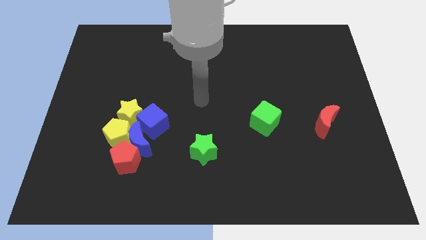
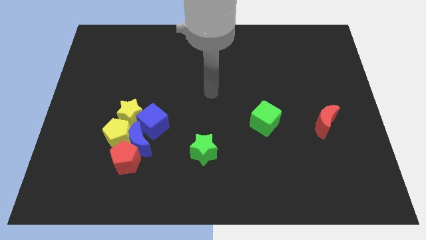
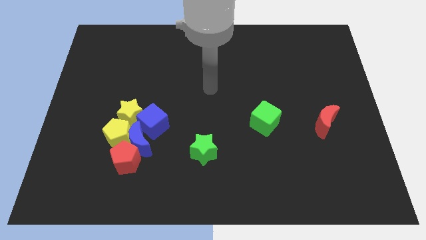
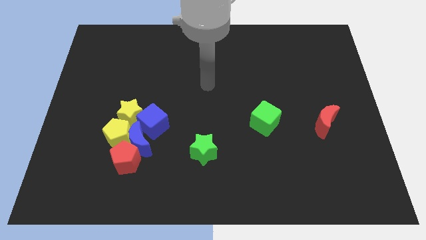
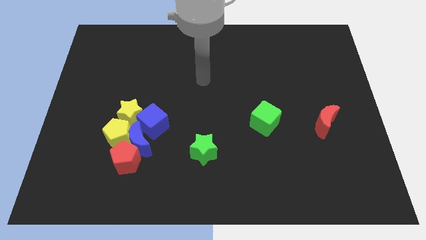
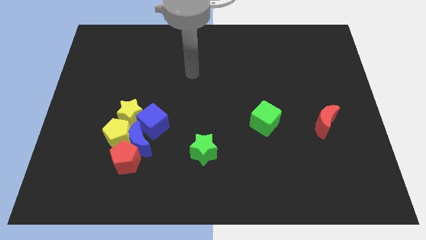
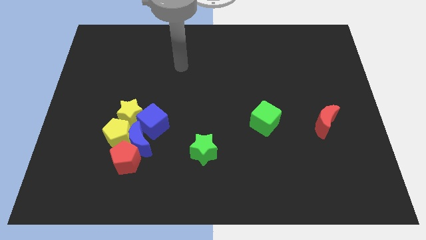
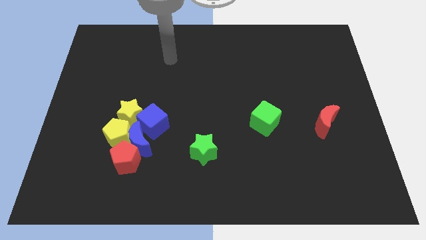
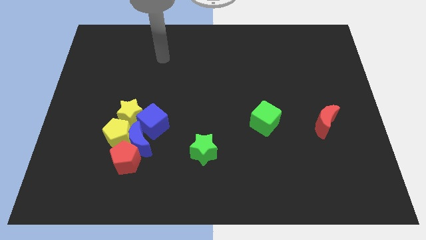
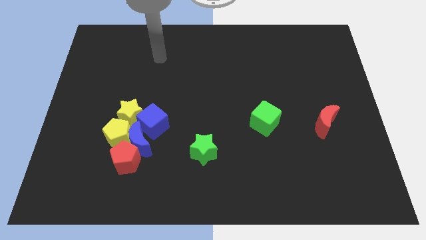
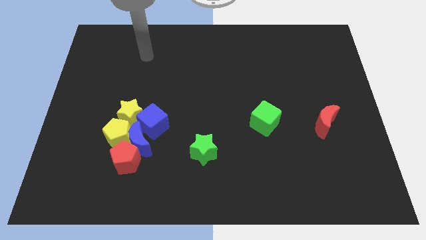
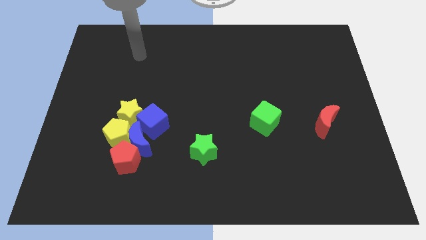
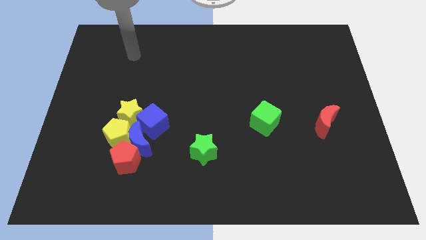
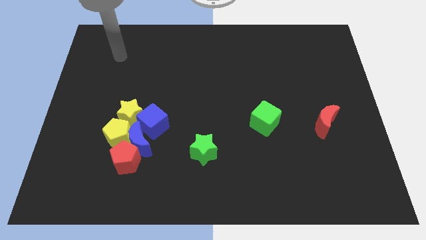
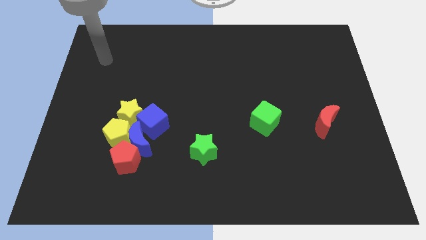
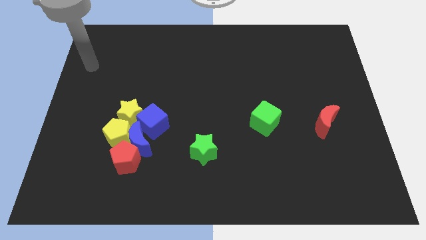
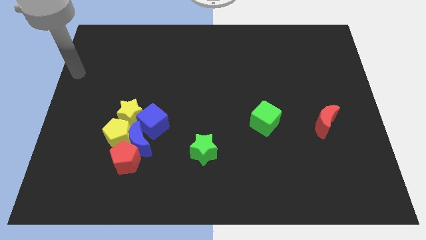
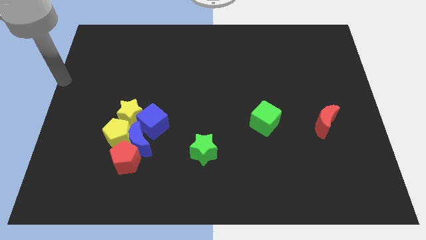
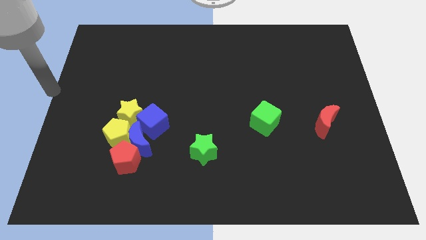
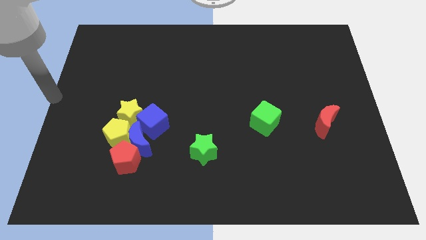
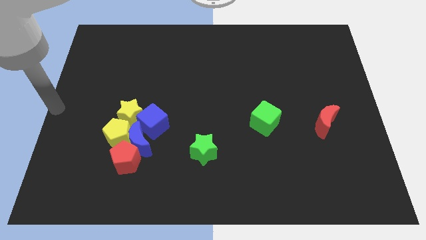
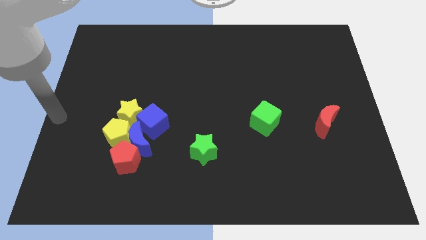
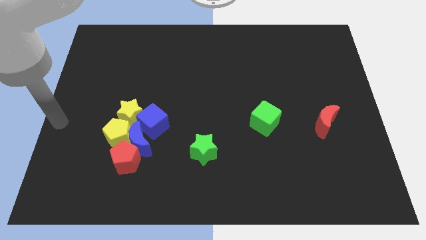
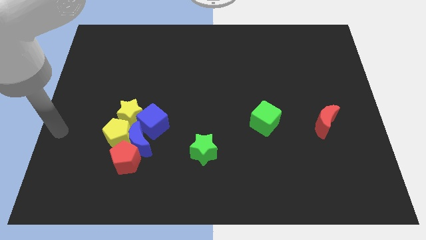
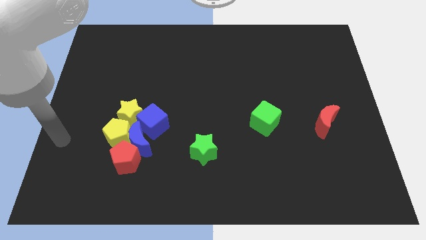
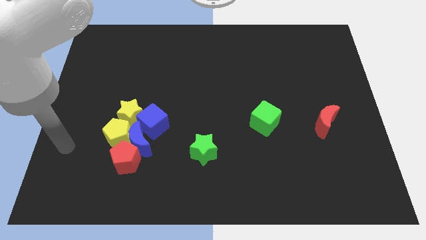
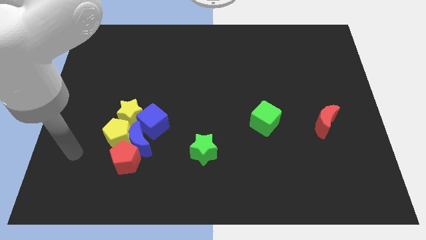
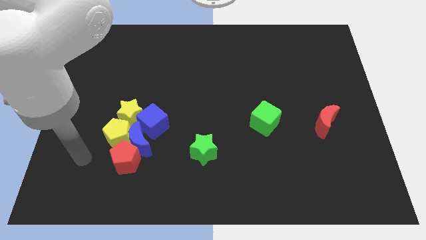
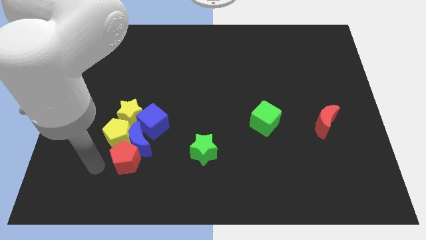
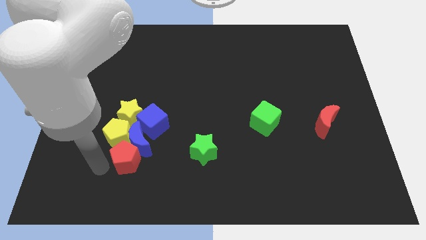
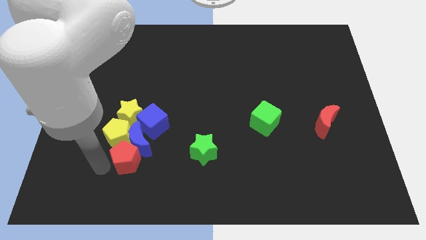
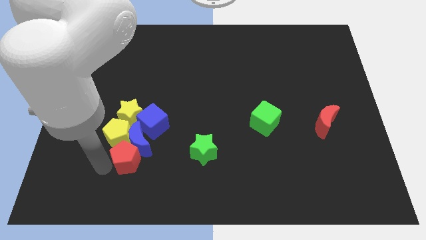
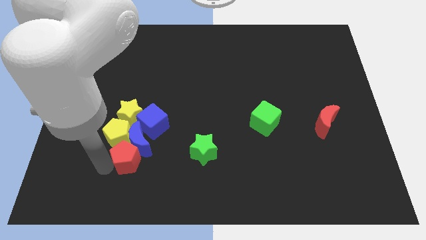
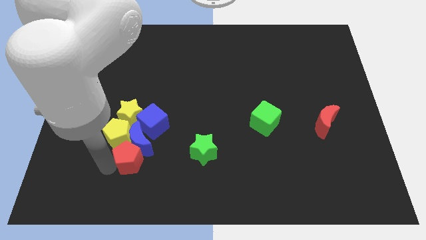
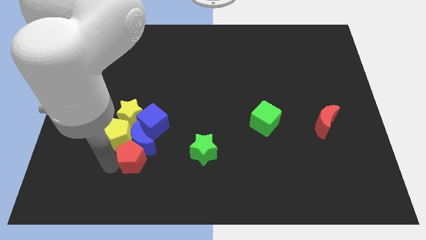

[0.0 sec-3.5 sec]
tap the left side of the red pentagon

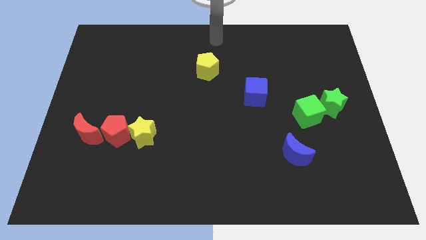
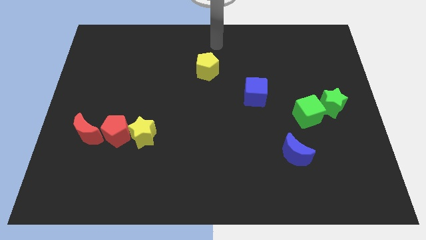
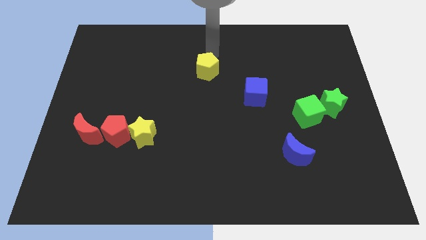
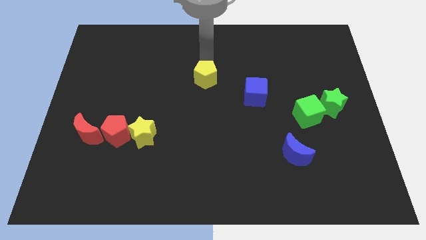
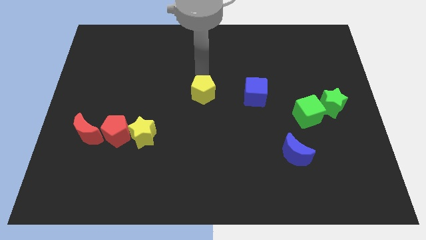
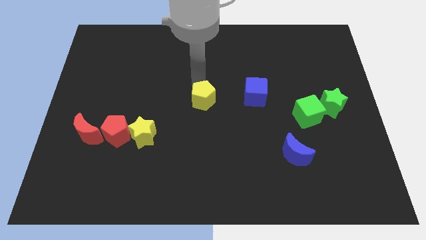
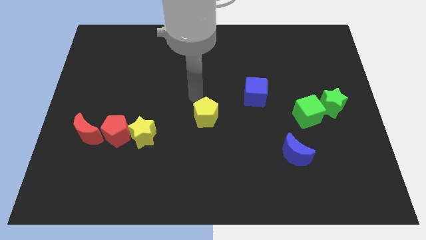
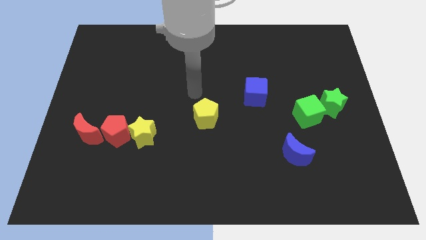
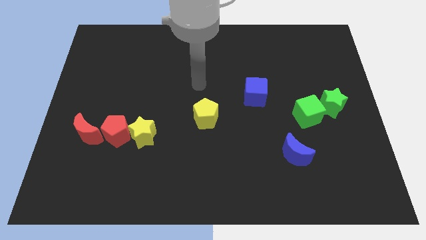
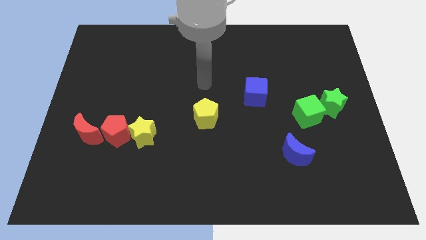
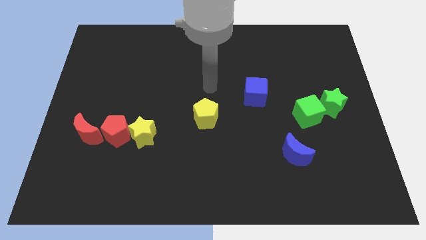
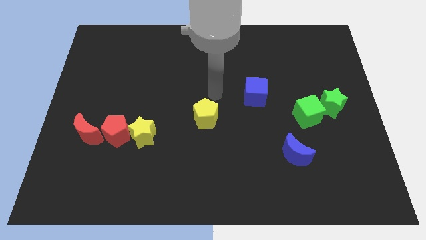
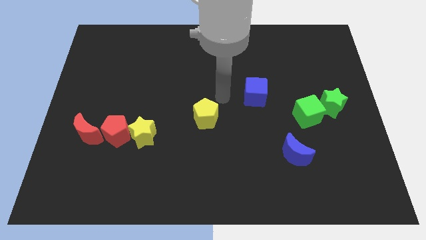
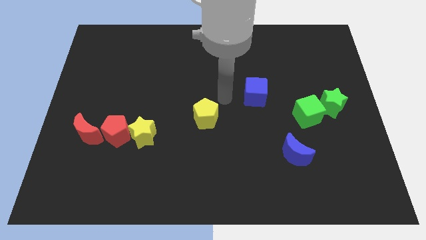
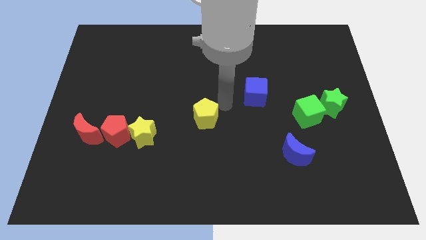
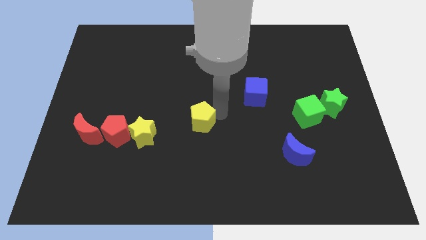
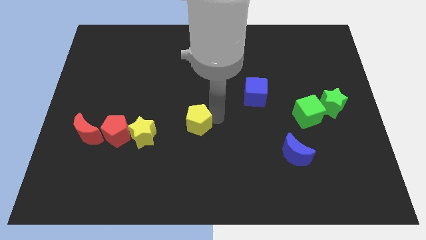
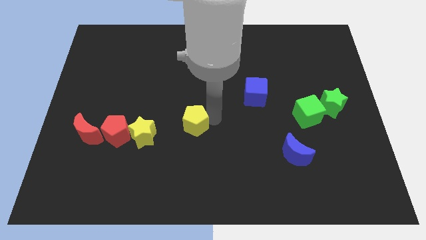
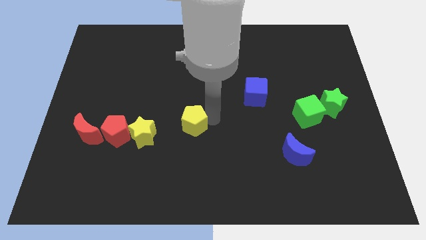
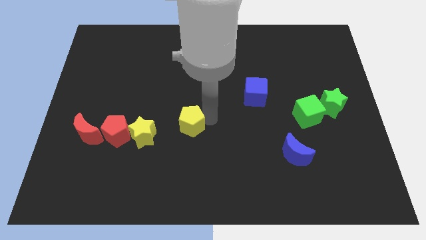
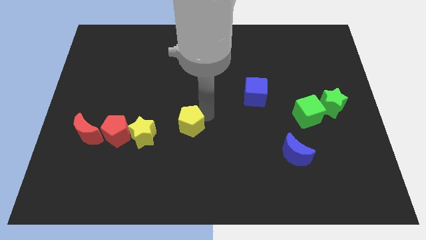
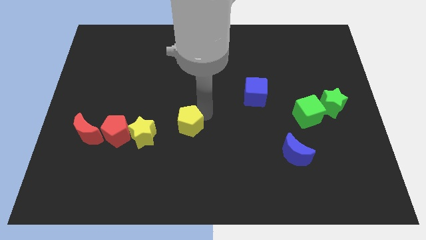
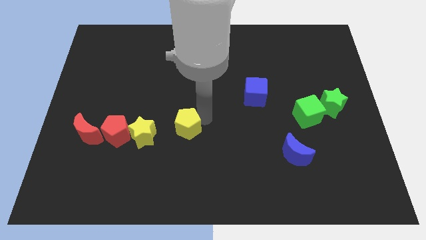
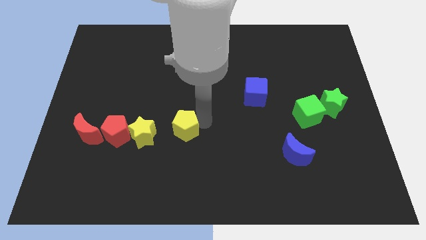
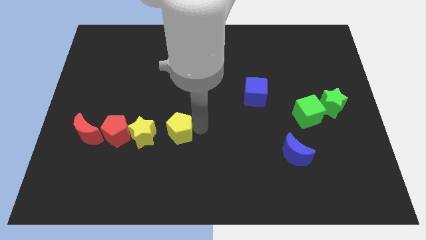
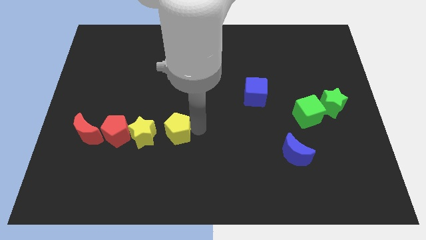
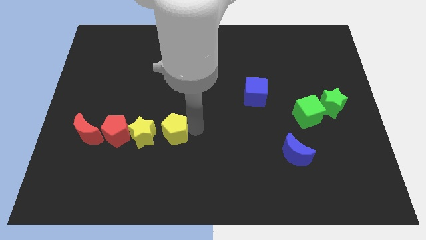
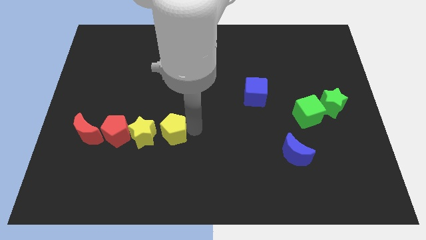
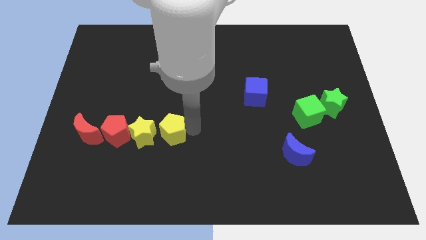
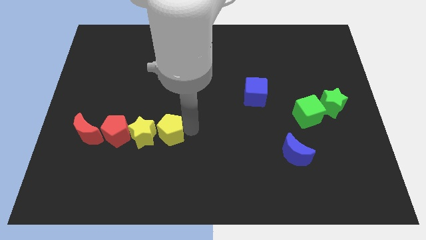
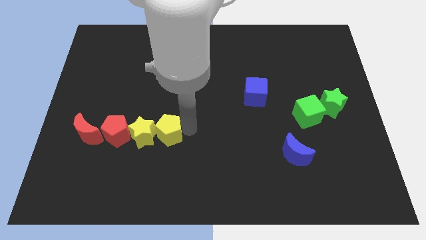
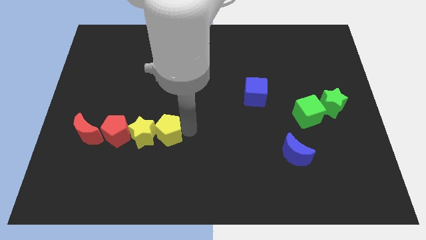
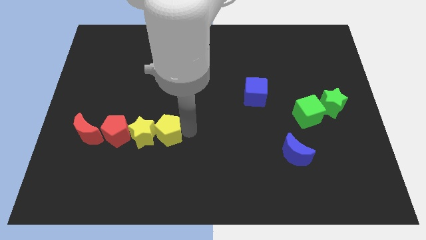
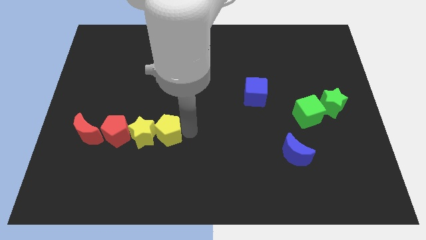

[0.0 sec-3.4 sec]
move yellow pentagon into the group of blocks

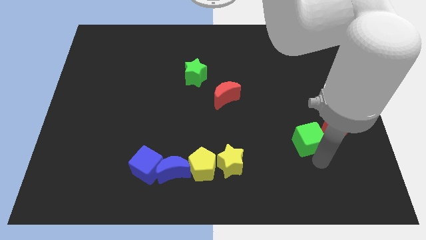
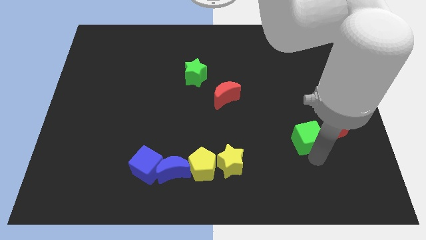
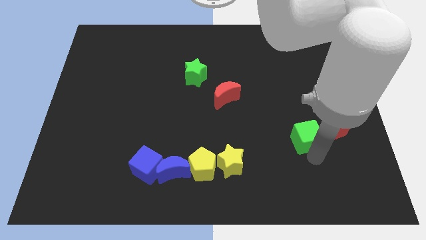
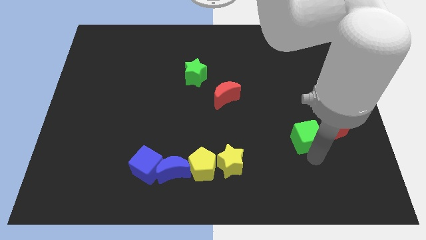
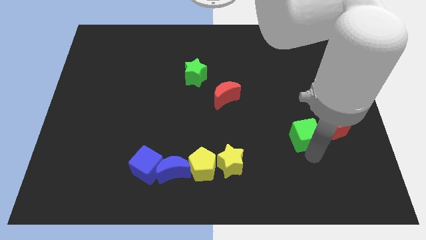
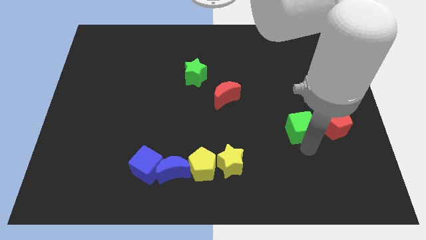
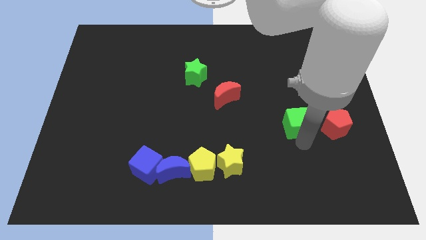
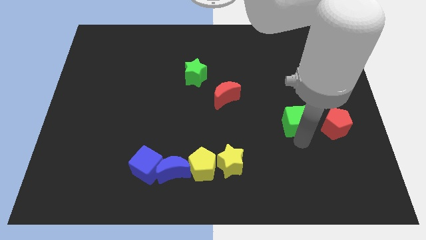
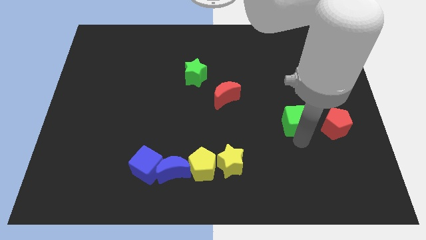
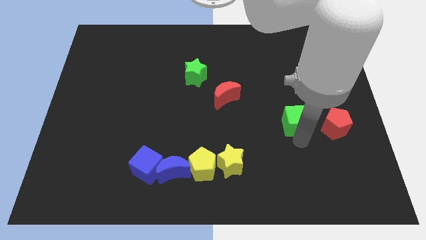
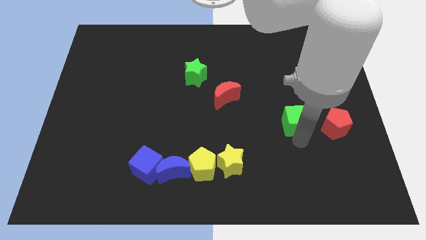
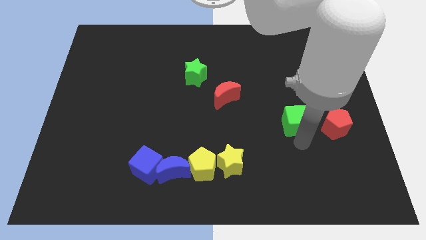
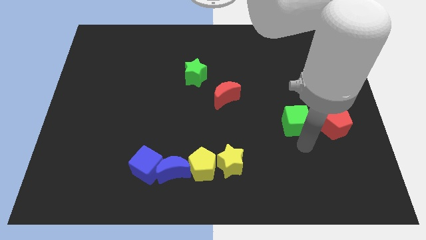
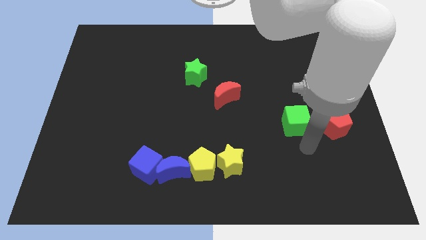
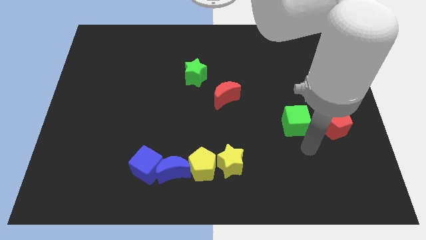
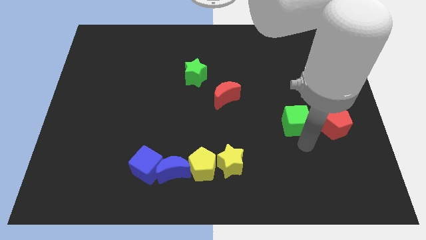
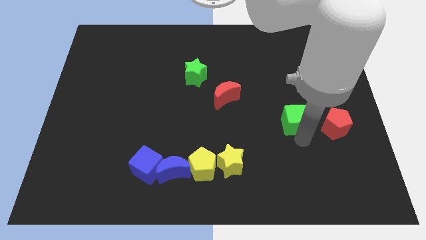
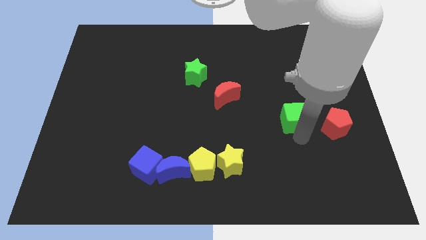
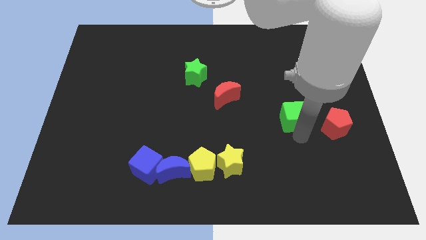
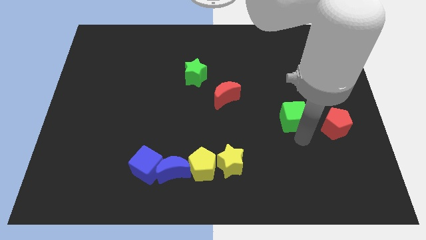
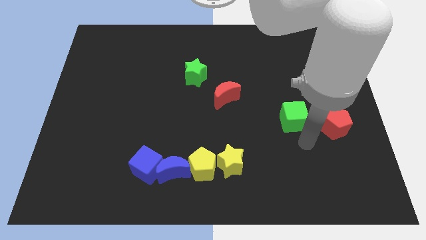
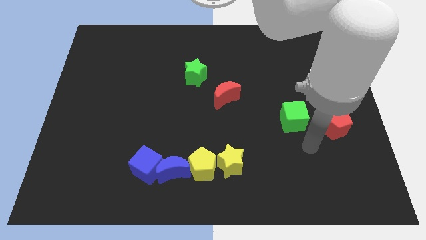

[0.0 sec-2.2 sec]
place the green cube towards left side of red pentagon
